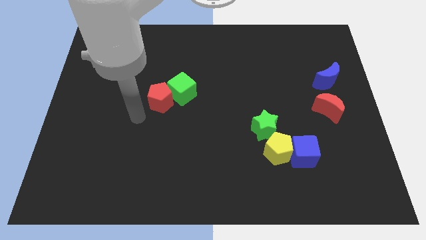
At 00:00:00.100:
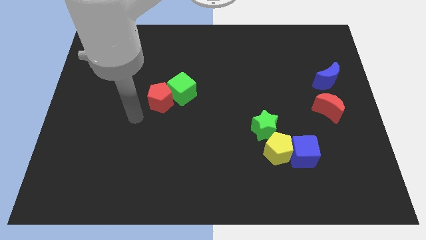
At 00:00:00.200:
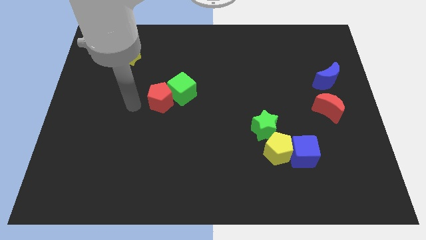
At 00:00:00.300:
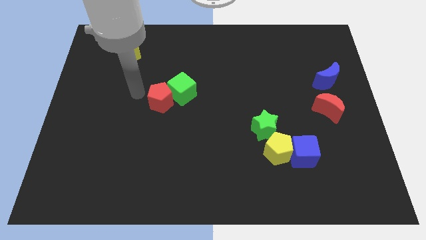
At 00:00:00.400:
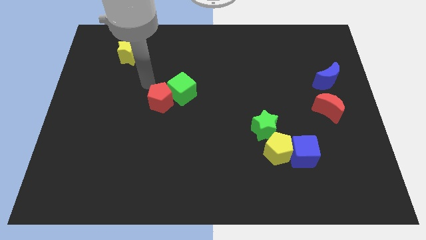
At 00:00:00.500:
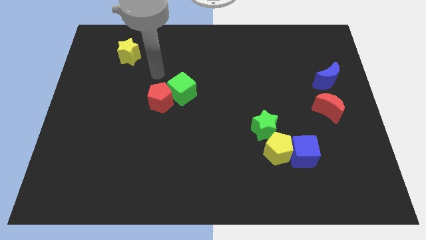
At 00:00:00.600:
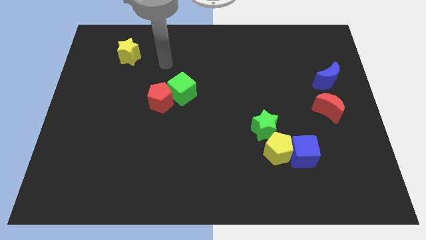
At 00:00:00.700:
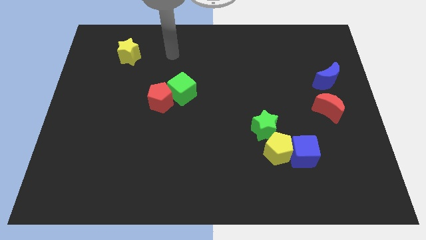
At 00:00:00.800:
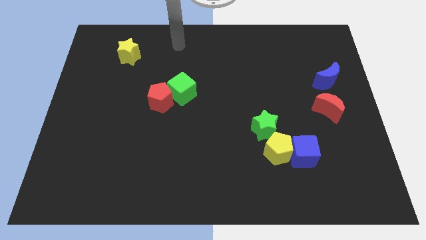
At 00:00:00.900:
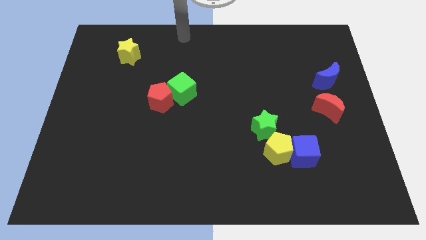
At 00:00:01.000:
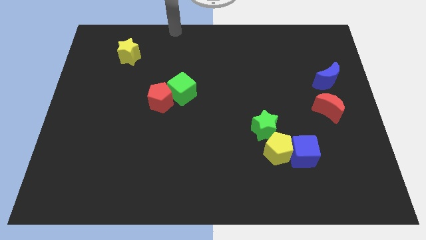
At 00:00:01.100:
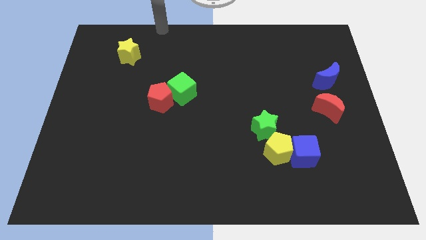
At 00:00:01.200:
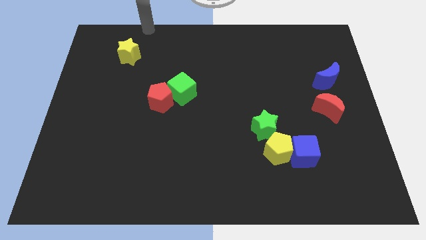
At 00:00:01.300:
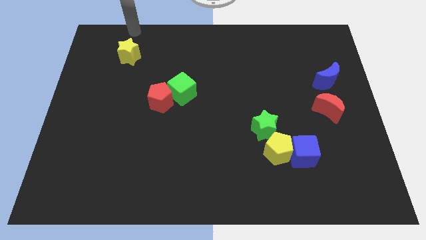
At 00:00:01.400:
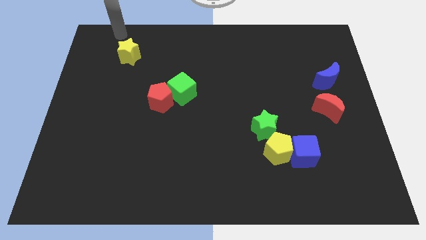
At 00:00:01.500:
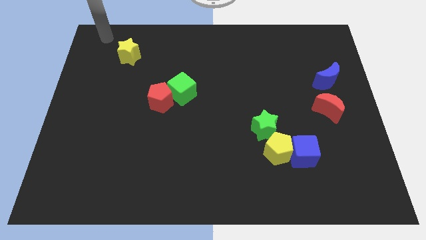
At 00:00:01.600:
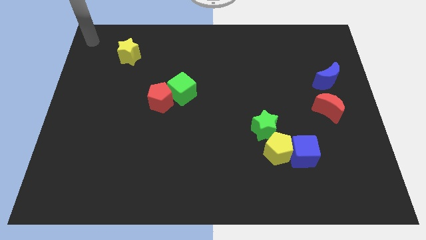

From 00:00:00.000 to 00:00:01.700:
place your arm at the top left corner of the board

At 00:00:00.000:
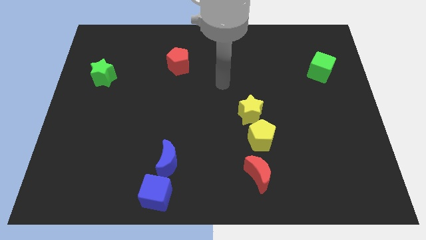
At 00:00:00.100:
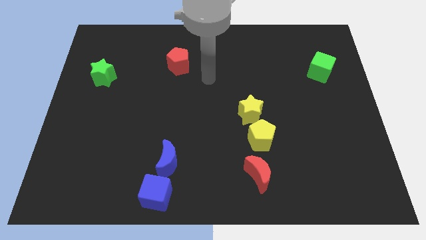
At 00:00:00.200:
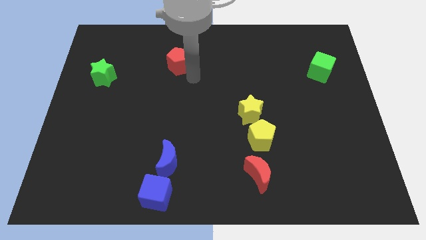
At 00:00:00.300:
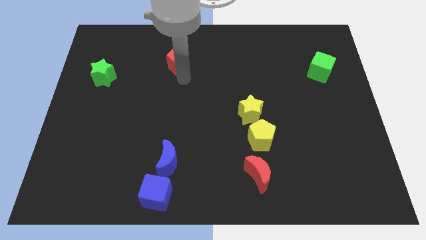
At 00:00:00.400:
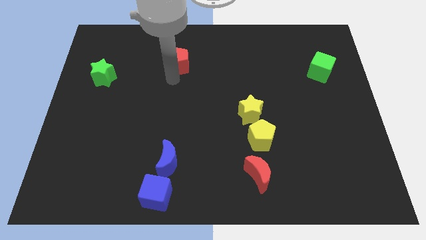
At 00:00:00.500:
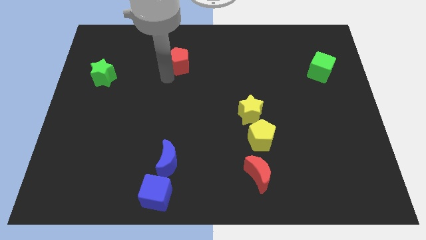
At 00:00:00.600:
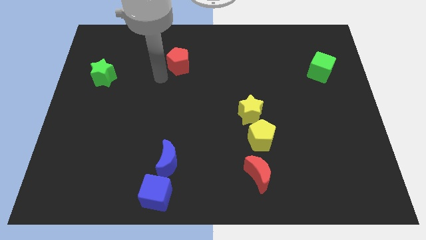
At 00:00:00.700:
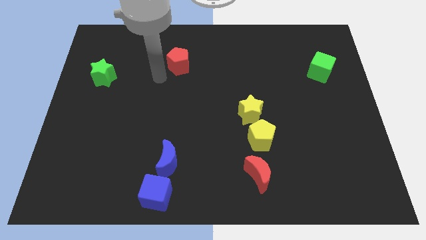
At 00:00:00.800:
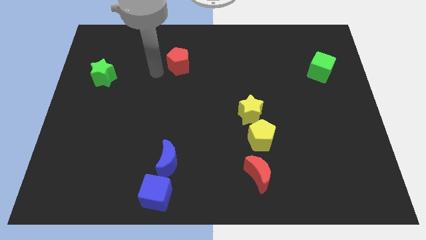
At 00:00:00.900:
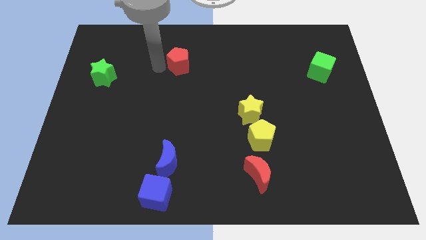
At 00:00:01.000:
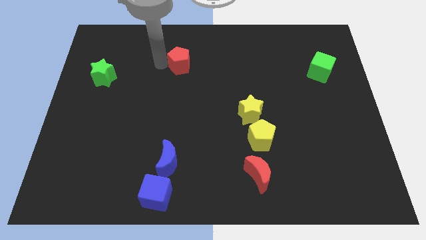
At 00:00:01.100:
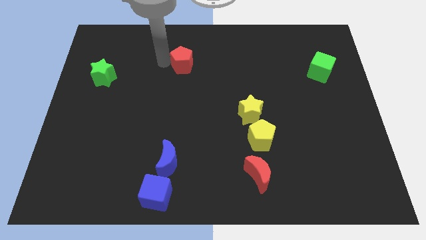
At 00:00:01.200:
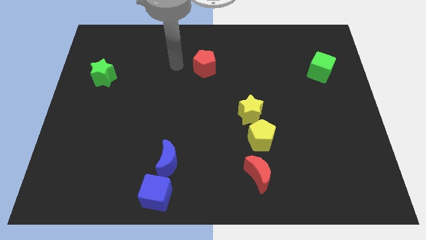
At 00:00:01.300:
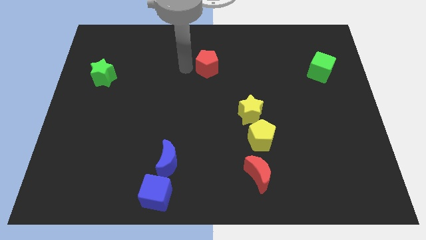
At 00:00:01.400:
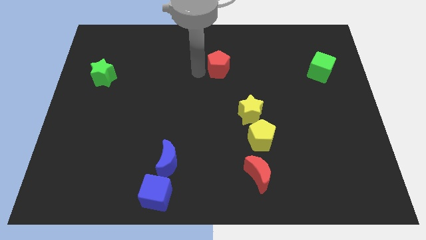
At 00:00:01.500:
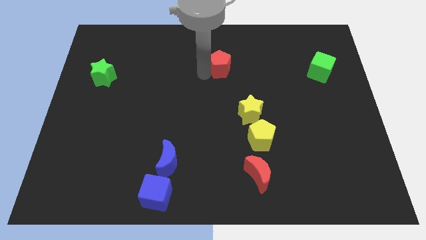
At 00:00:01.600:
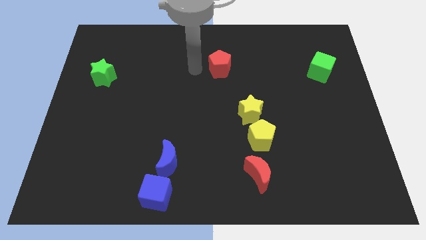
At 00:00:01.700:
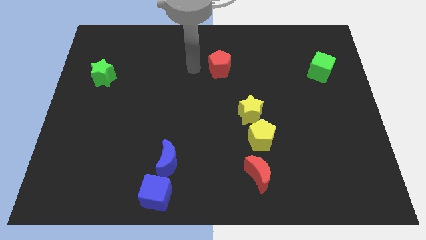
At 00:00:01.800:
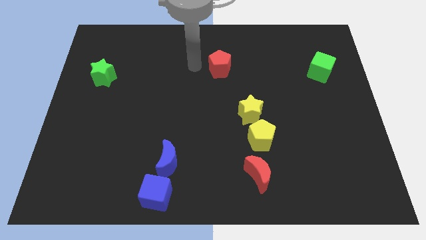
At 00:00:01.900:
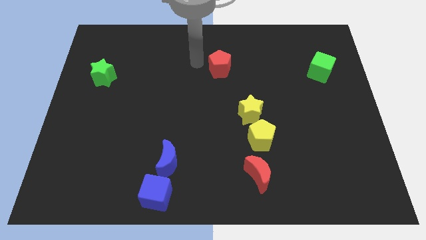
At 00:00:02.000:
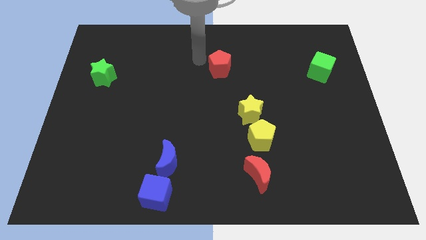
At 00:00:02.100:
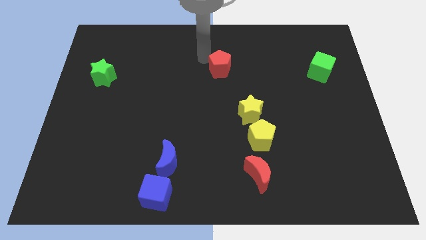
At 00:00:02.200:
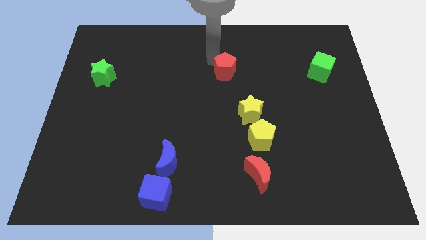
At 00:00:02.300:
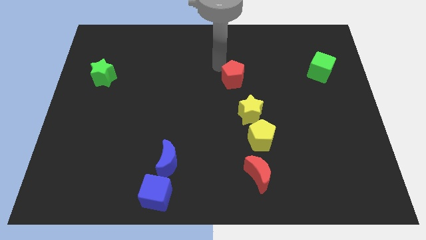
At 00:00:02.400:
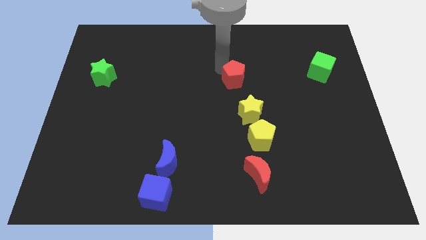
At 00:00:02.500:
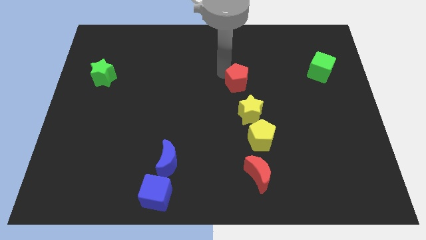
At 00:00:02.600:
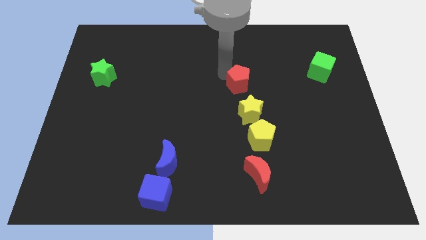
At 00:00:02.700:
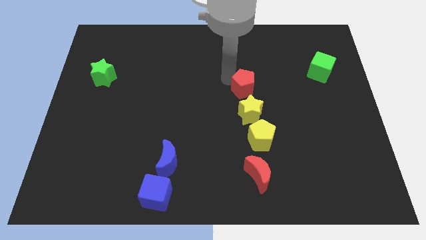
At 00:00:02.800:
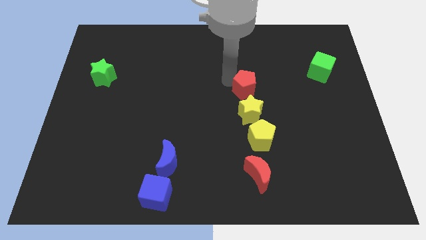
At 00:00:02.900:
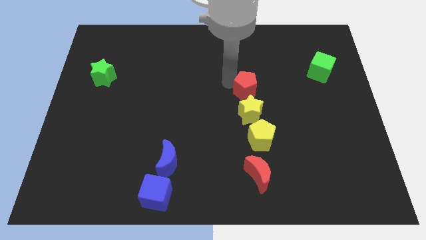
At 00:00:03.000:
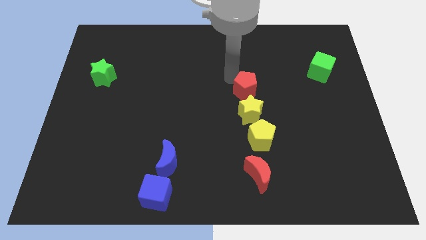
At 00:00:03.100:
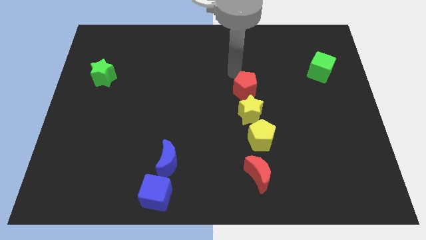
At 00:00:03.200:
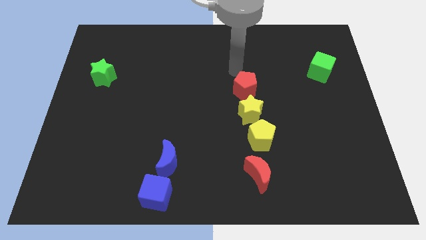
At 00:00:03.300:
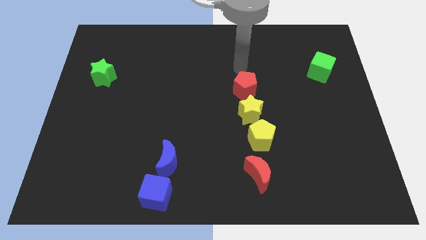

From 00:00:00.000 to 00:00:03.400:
push the red pentagon to the top of yellow star

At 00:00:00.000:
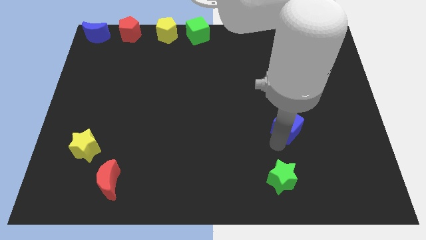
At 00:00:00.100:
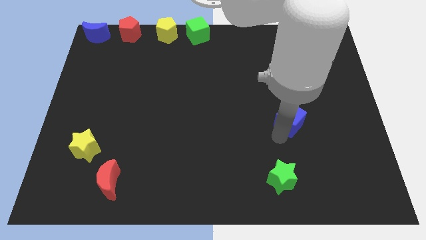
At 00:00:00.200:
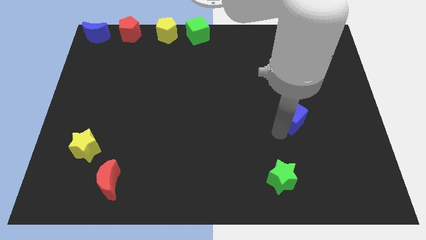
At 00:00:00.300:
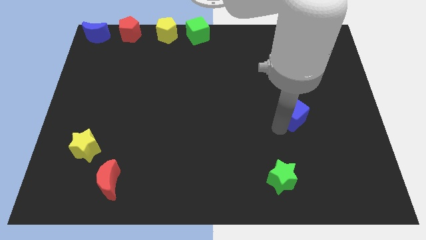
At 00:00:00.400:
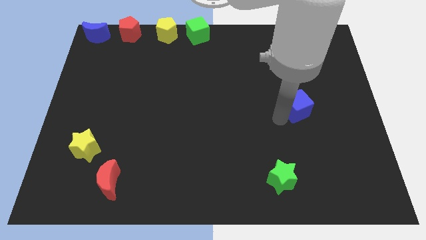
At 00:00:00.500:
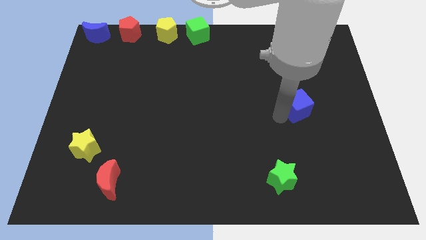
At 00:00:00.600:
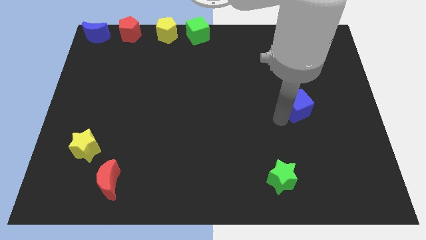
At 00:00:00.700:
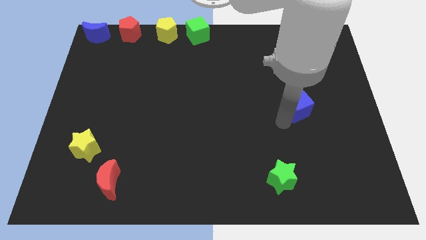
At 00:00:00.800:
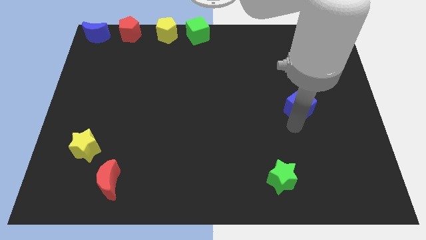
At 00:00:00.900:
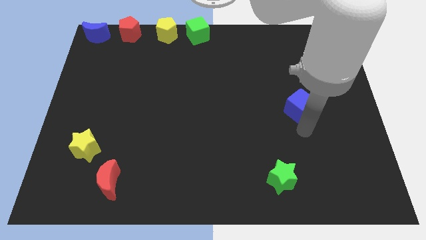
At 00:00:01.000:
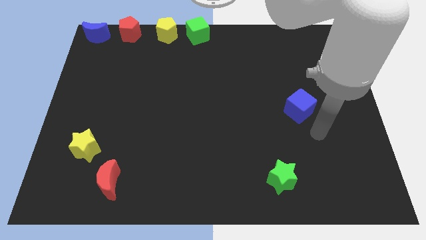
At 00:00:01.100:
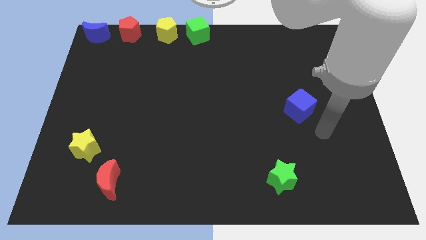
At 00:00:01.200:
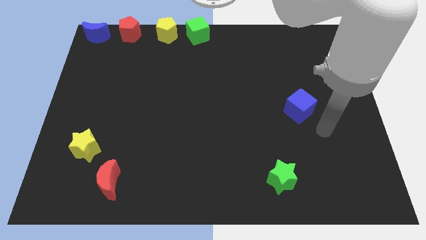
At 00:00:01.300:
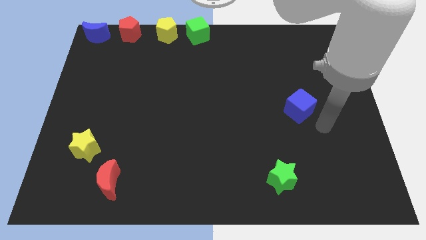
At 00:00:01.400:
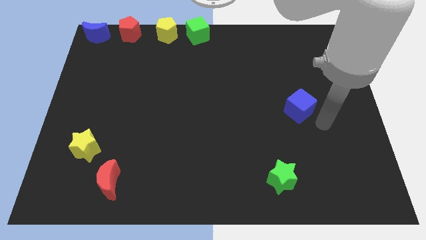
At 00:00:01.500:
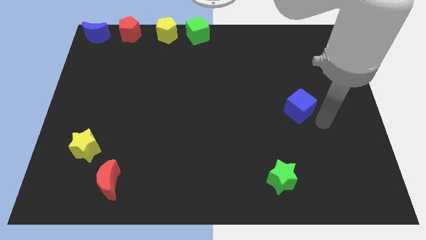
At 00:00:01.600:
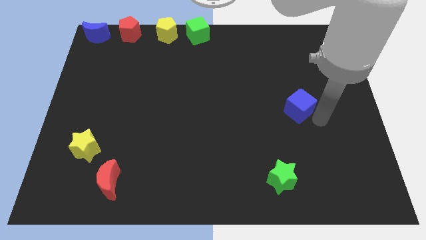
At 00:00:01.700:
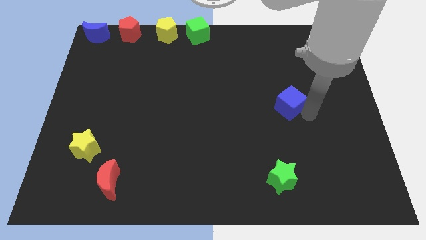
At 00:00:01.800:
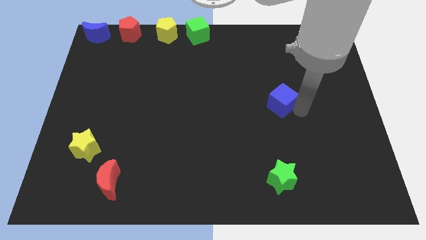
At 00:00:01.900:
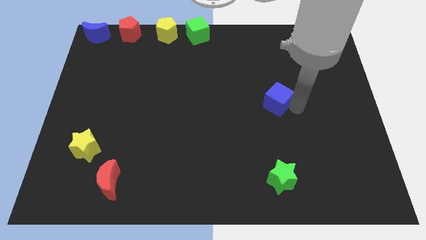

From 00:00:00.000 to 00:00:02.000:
push the blue cube slightly upwards

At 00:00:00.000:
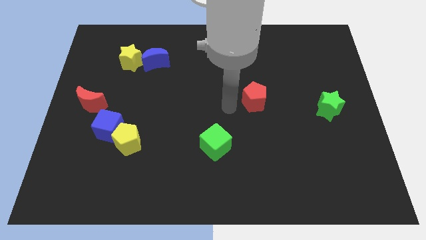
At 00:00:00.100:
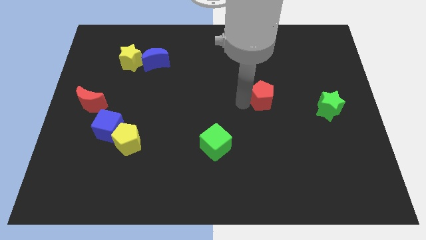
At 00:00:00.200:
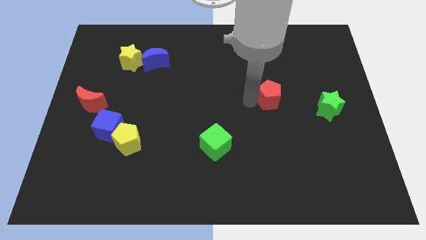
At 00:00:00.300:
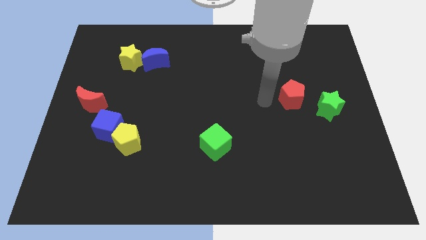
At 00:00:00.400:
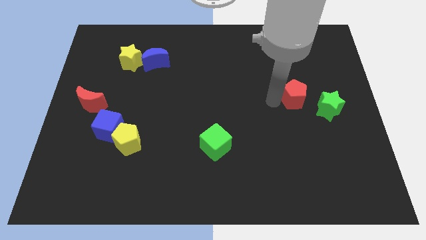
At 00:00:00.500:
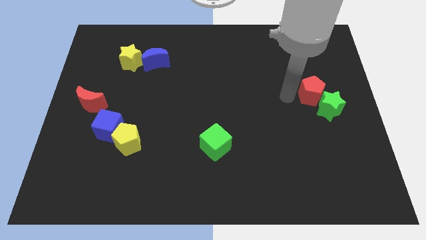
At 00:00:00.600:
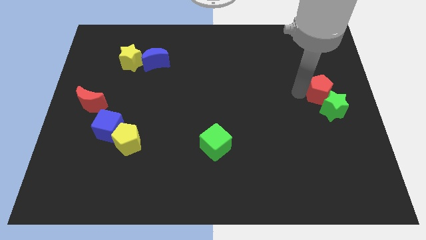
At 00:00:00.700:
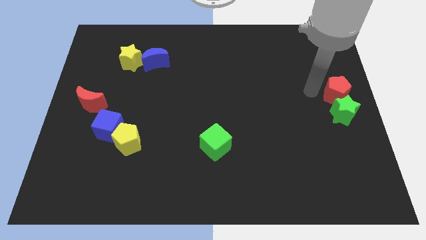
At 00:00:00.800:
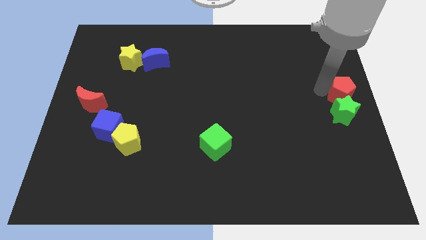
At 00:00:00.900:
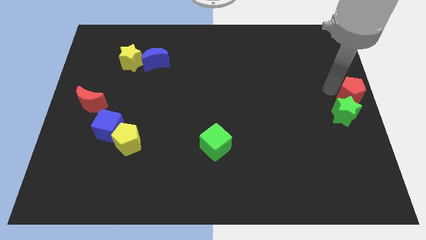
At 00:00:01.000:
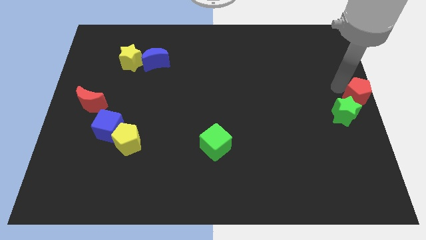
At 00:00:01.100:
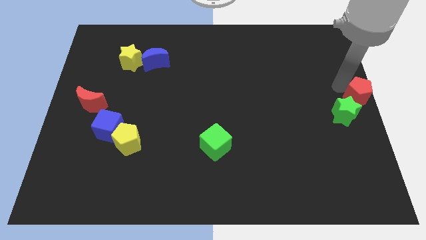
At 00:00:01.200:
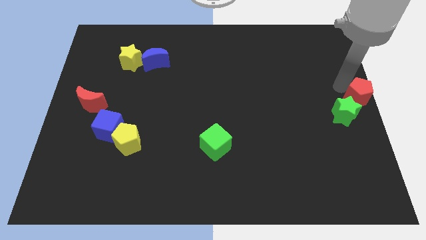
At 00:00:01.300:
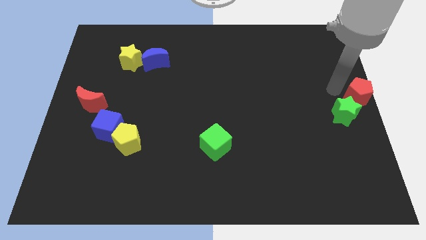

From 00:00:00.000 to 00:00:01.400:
move the red pentagon to the center right of the board

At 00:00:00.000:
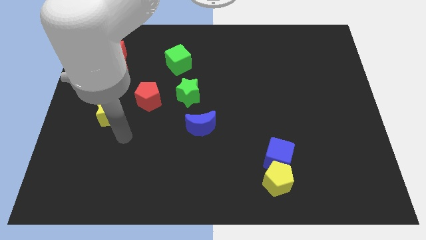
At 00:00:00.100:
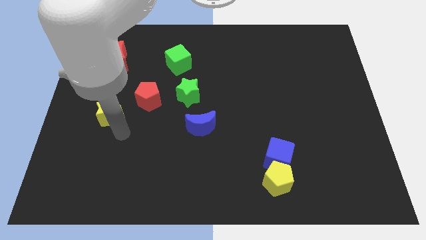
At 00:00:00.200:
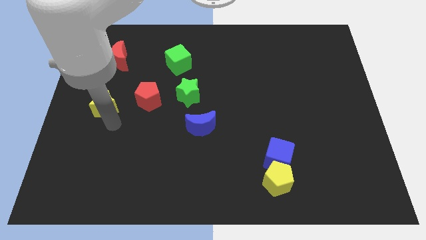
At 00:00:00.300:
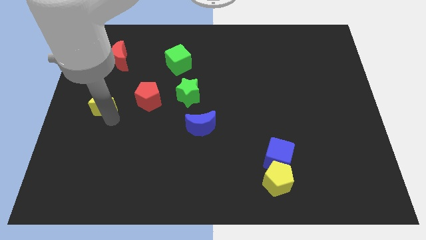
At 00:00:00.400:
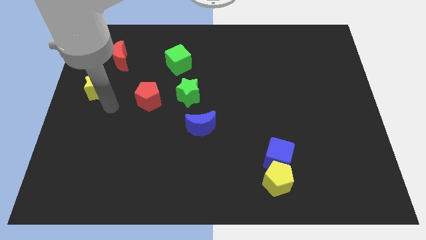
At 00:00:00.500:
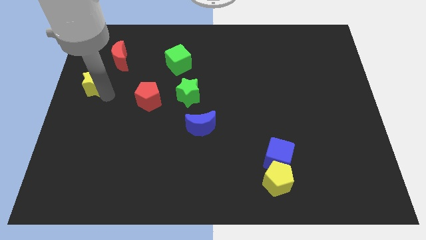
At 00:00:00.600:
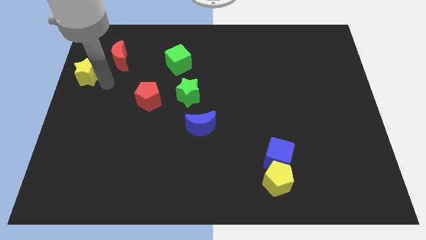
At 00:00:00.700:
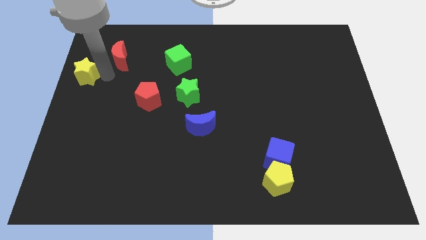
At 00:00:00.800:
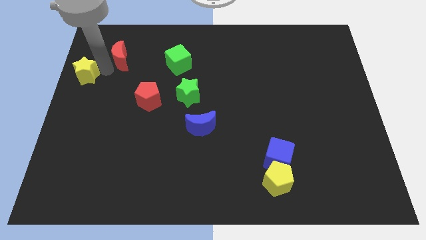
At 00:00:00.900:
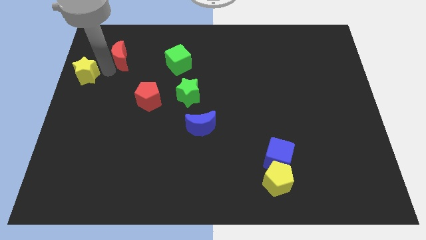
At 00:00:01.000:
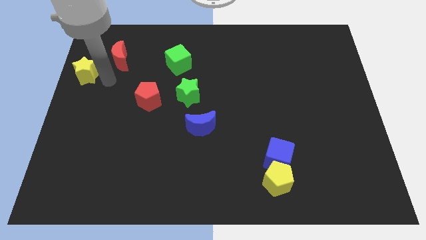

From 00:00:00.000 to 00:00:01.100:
slide yellow star to bottom left of red moon
